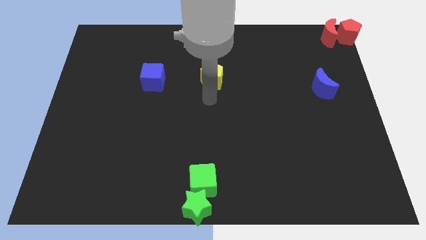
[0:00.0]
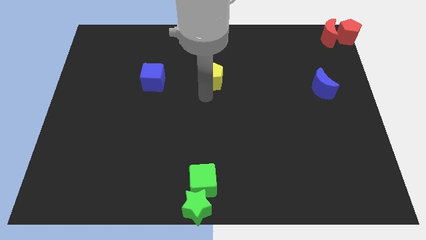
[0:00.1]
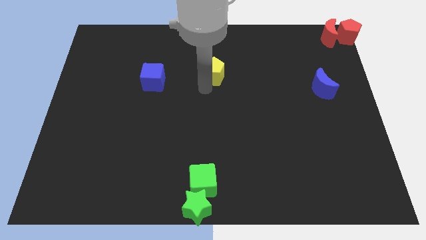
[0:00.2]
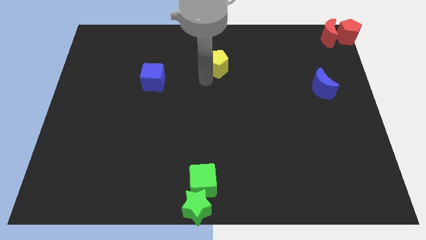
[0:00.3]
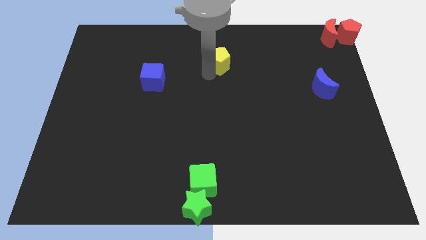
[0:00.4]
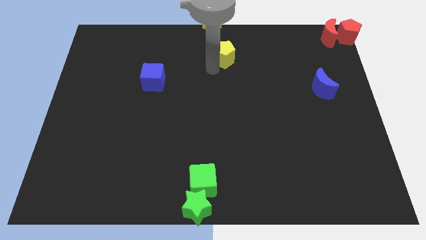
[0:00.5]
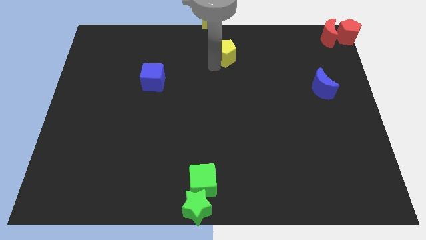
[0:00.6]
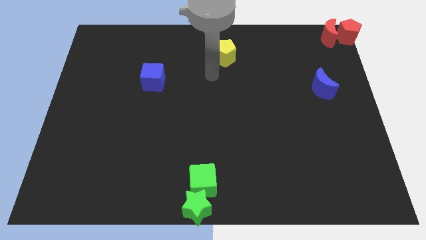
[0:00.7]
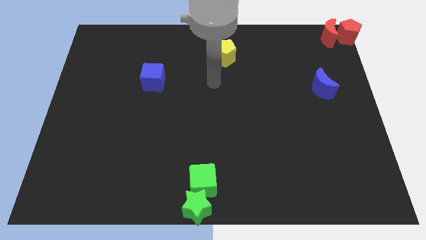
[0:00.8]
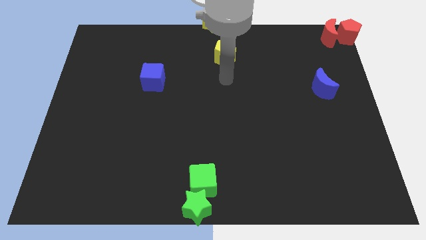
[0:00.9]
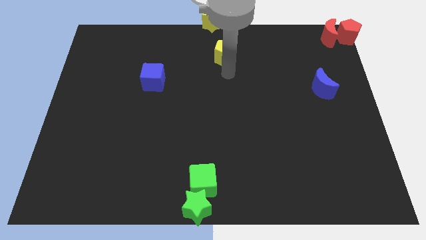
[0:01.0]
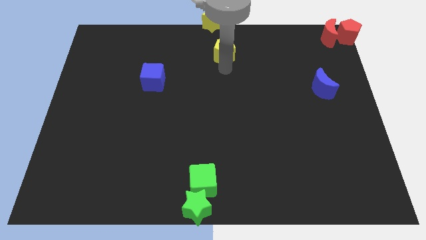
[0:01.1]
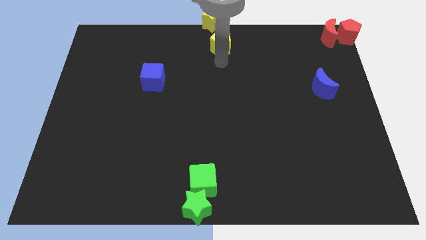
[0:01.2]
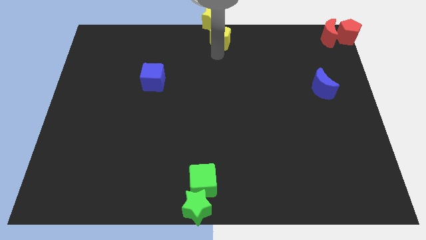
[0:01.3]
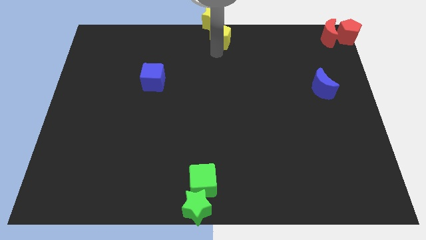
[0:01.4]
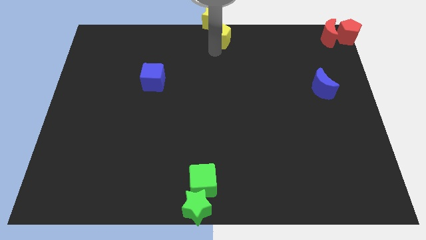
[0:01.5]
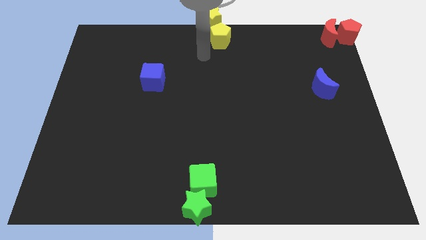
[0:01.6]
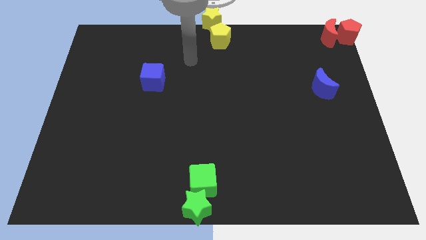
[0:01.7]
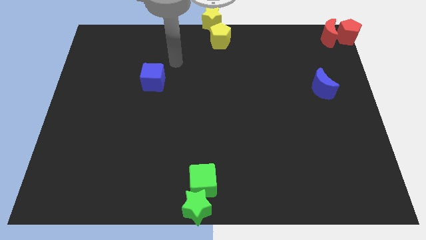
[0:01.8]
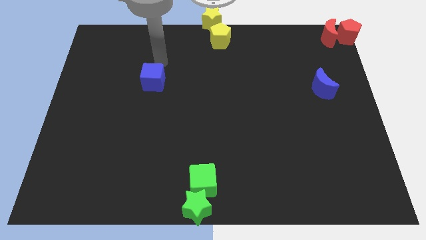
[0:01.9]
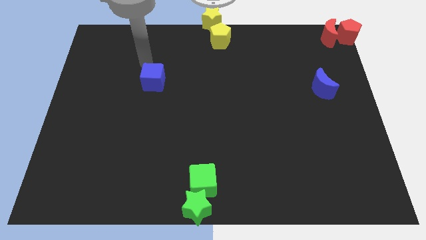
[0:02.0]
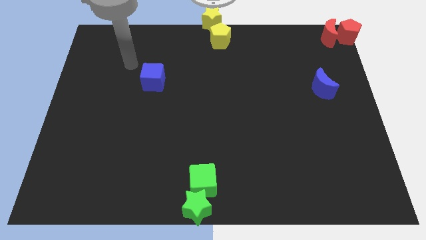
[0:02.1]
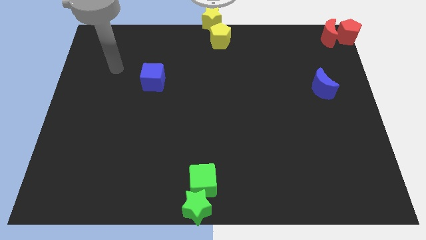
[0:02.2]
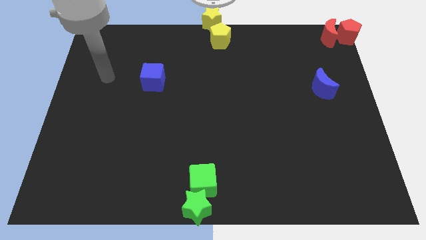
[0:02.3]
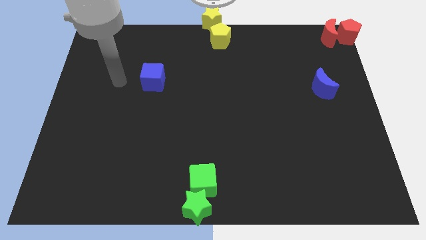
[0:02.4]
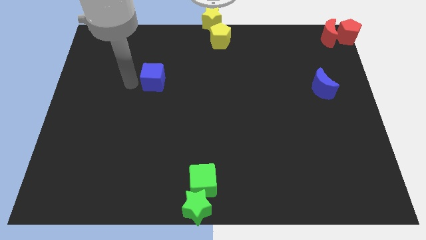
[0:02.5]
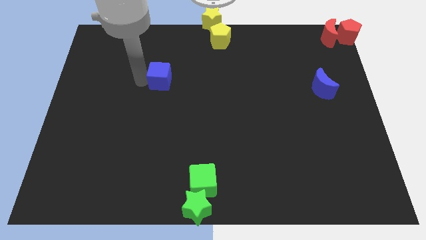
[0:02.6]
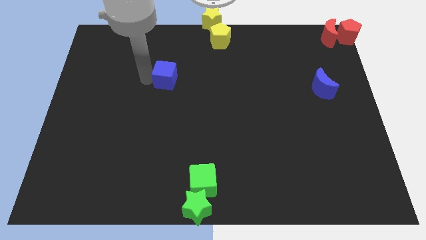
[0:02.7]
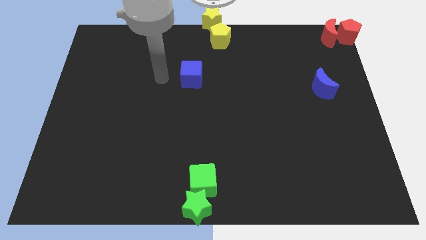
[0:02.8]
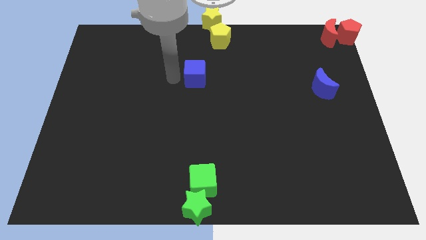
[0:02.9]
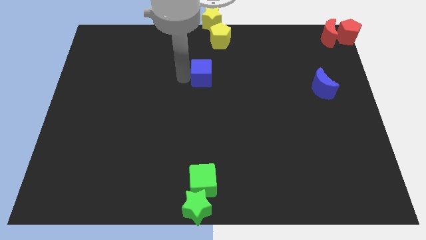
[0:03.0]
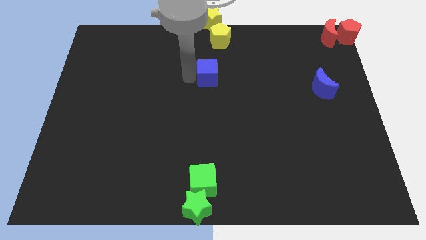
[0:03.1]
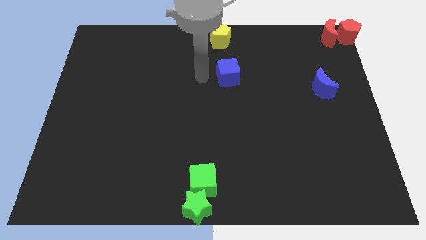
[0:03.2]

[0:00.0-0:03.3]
push blue cube below yellow pentagon

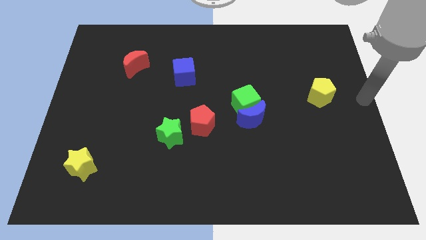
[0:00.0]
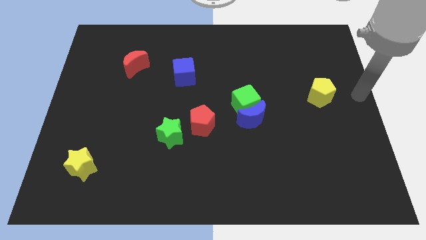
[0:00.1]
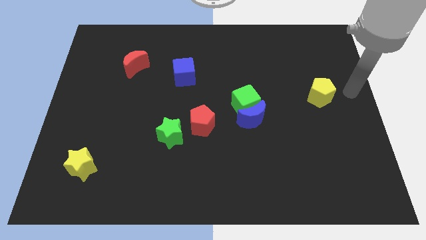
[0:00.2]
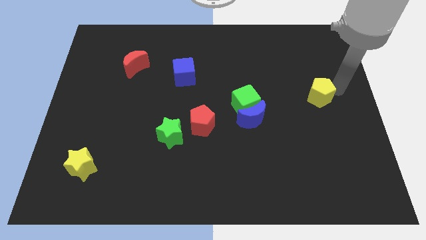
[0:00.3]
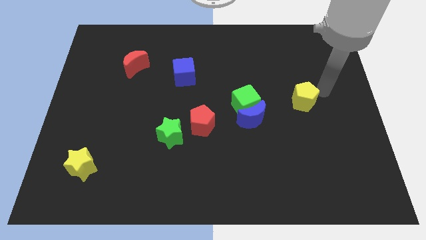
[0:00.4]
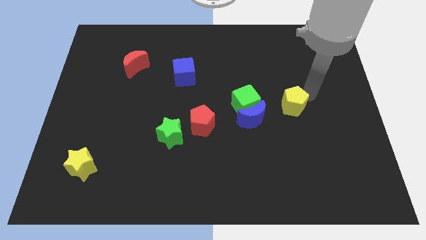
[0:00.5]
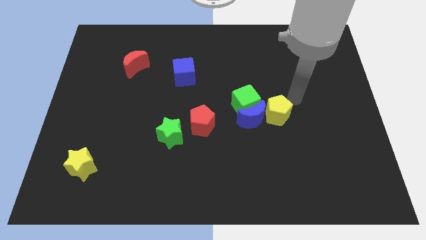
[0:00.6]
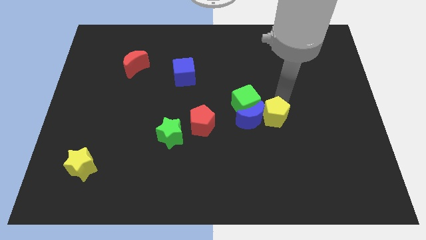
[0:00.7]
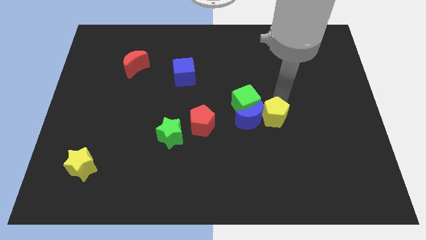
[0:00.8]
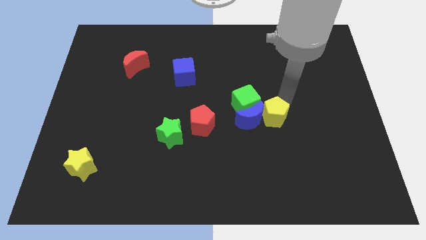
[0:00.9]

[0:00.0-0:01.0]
push the yellow pentagon into the blue moon

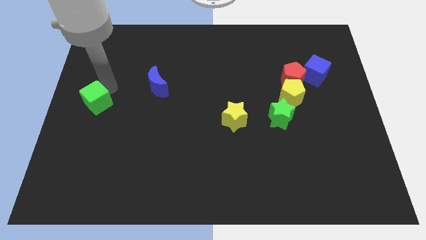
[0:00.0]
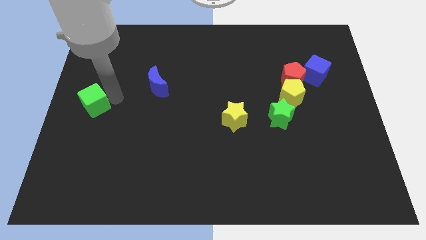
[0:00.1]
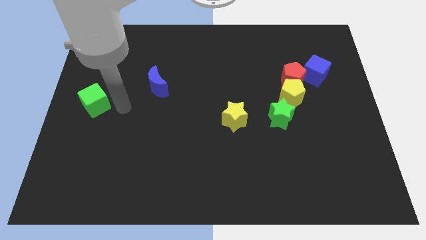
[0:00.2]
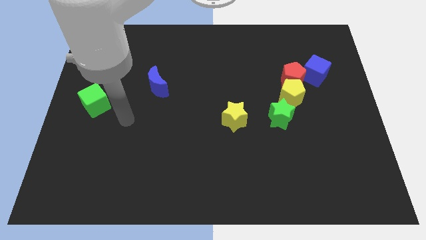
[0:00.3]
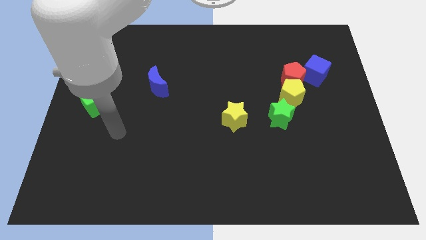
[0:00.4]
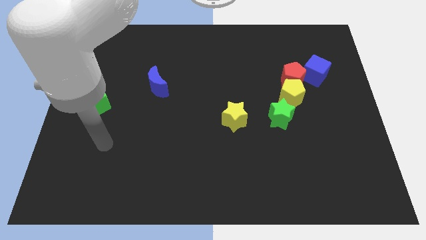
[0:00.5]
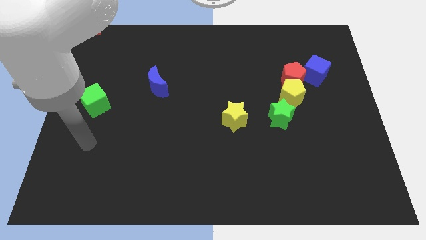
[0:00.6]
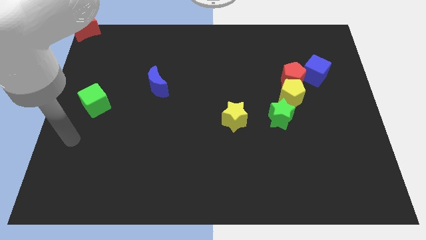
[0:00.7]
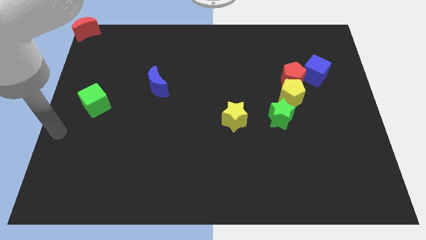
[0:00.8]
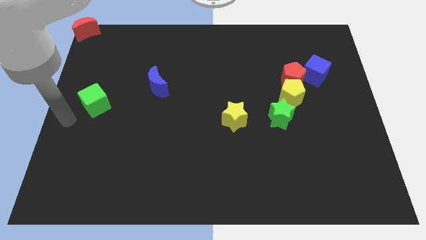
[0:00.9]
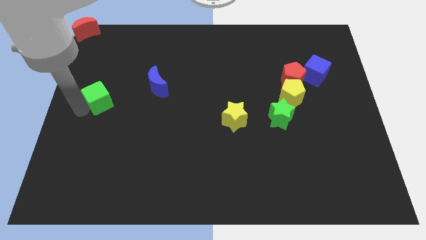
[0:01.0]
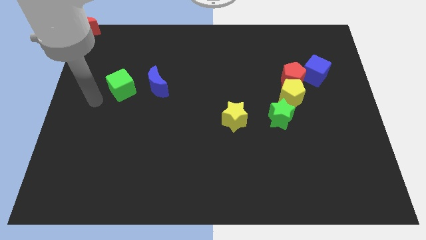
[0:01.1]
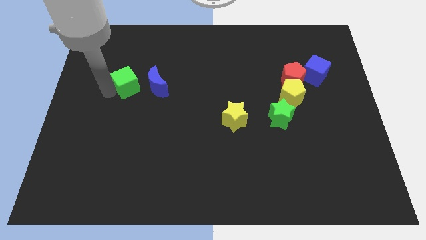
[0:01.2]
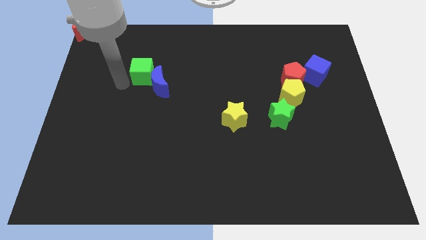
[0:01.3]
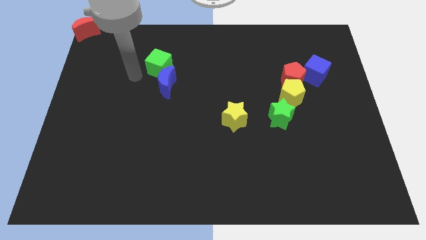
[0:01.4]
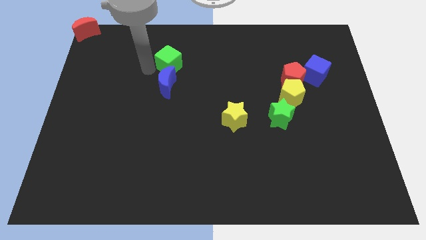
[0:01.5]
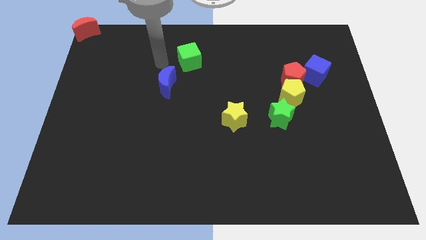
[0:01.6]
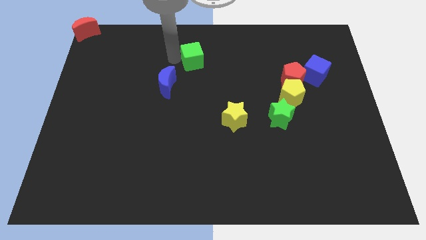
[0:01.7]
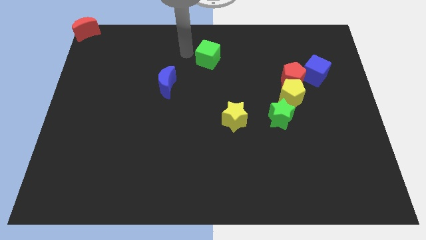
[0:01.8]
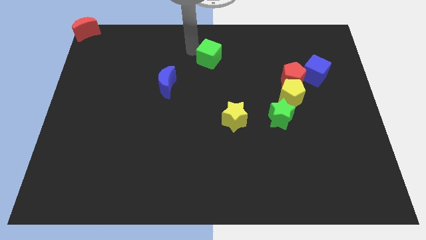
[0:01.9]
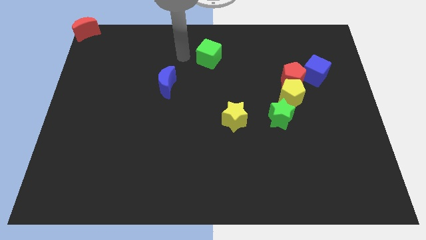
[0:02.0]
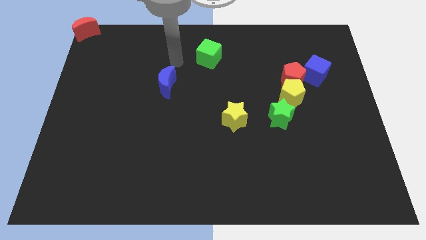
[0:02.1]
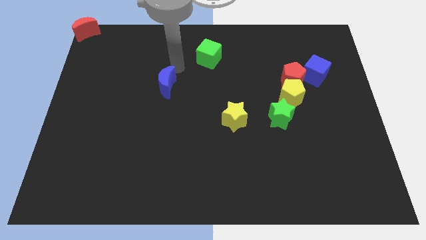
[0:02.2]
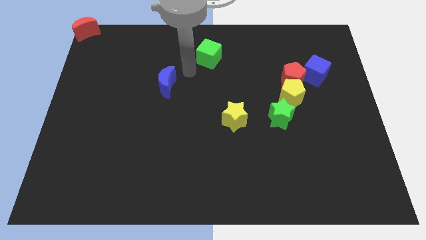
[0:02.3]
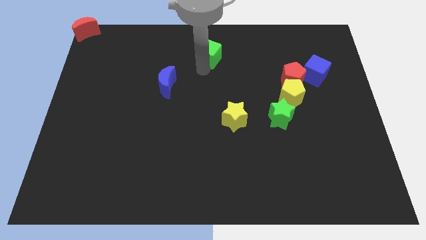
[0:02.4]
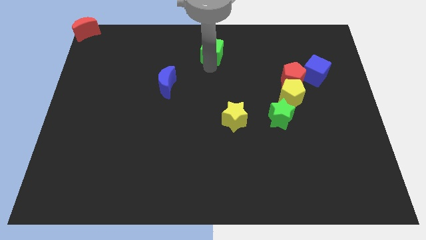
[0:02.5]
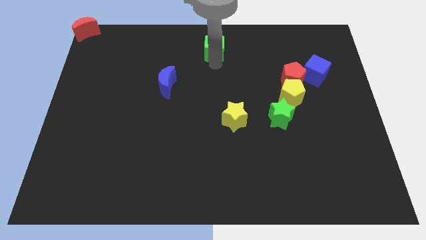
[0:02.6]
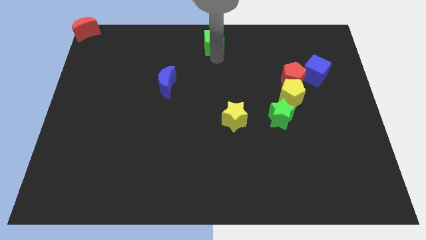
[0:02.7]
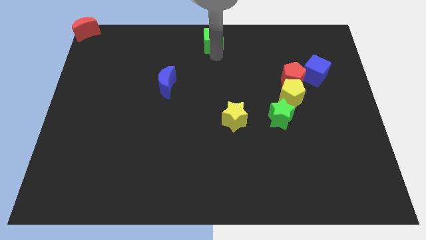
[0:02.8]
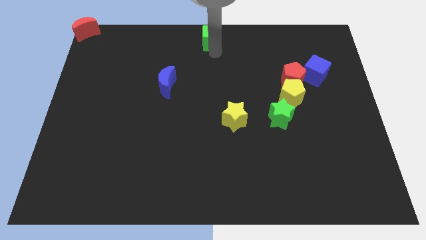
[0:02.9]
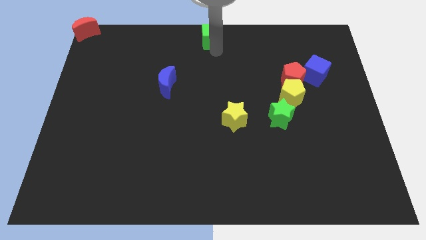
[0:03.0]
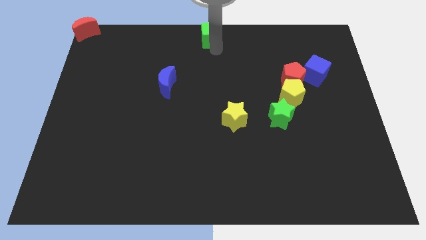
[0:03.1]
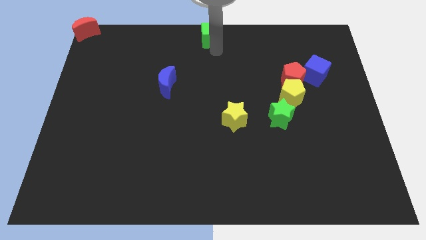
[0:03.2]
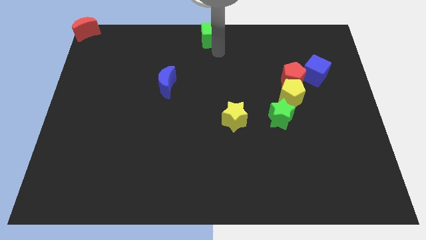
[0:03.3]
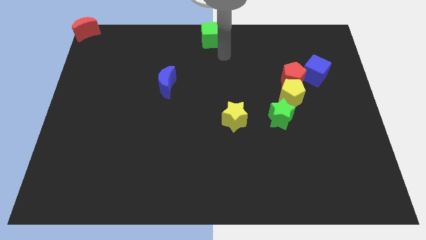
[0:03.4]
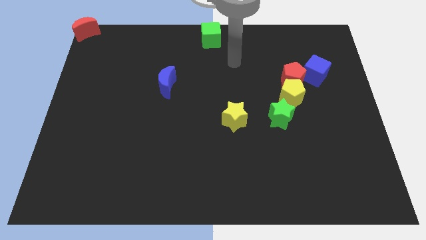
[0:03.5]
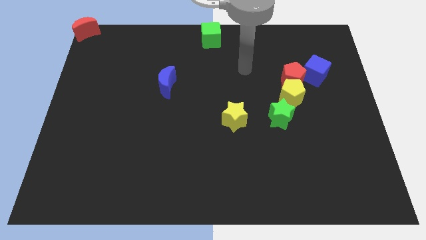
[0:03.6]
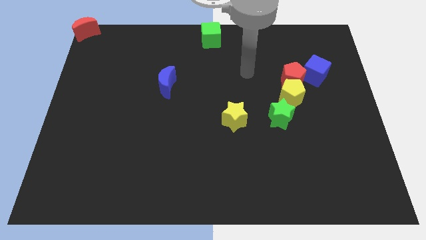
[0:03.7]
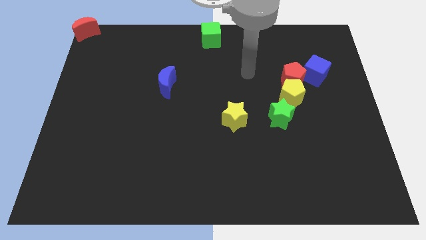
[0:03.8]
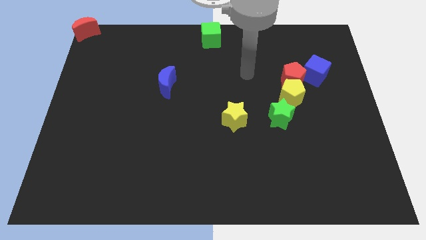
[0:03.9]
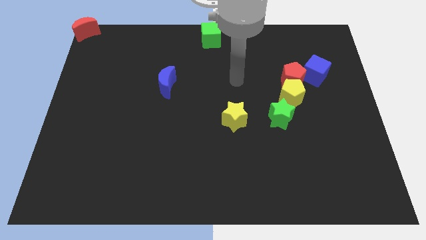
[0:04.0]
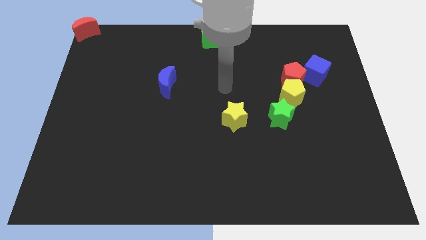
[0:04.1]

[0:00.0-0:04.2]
push the green cube to the top center of the board

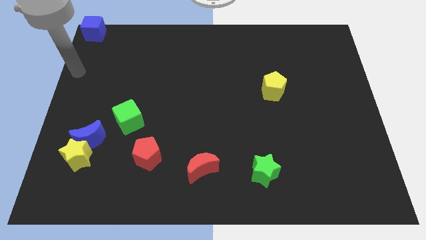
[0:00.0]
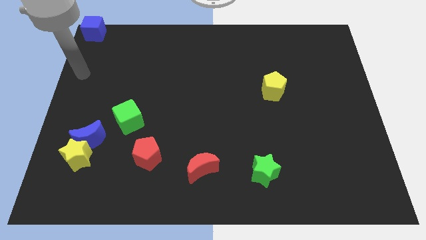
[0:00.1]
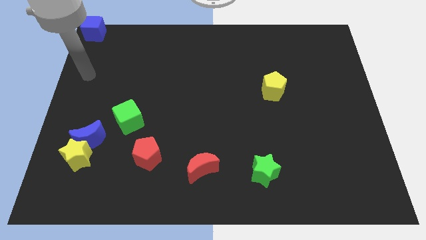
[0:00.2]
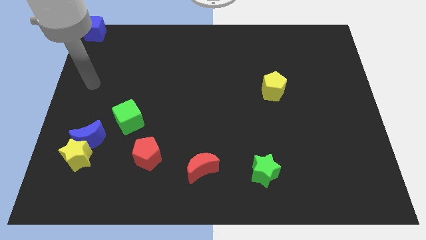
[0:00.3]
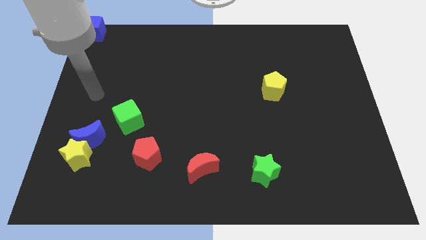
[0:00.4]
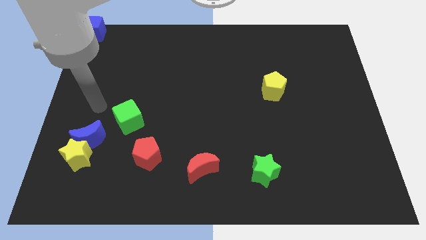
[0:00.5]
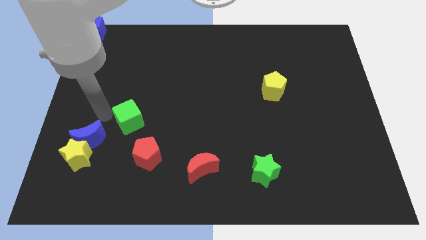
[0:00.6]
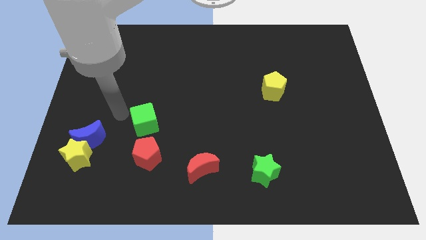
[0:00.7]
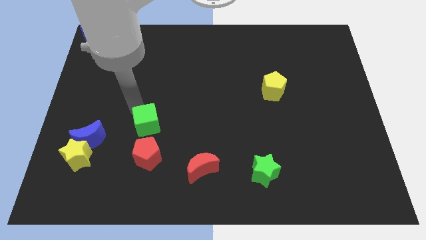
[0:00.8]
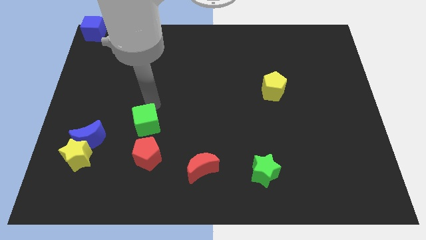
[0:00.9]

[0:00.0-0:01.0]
place green cube above red pentagon
